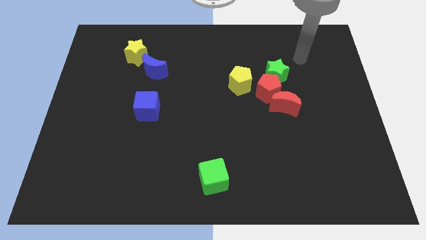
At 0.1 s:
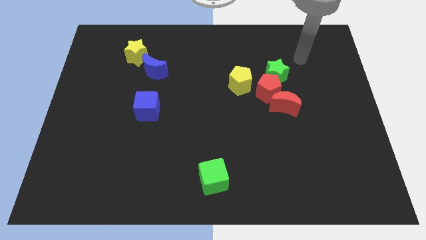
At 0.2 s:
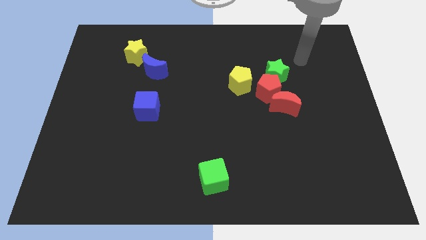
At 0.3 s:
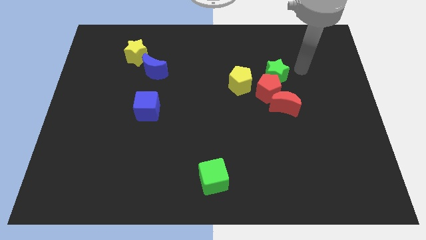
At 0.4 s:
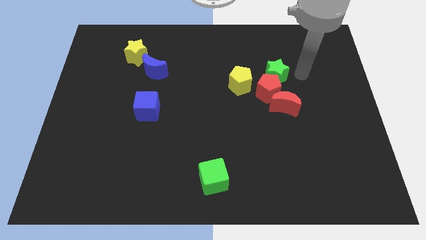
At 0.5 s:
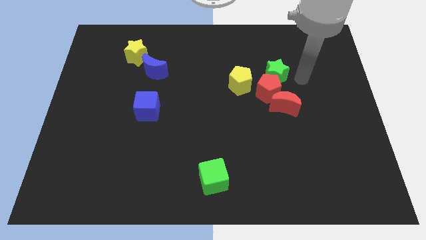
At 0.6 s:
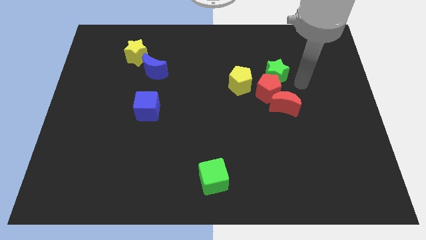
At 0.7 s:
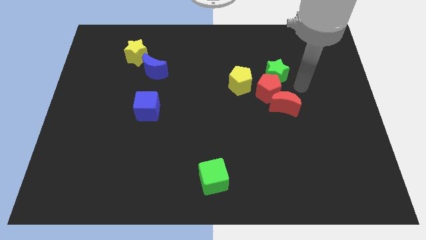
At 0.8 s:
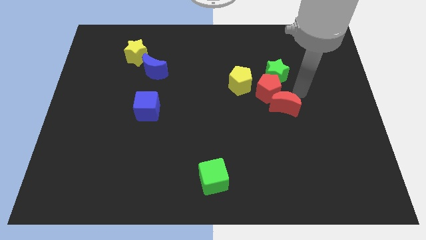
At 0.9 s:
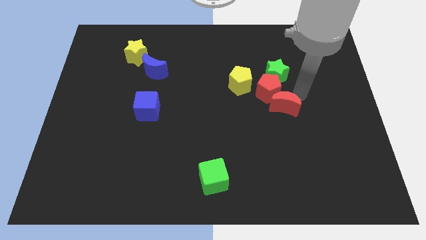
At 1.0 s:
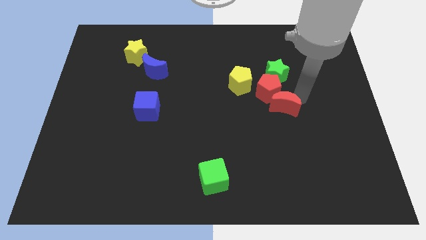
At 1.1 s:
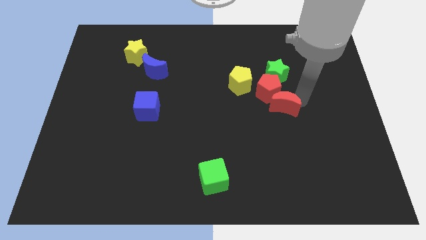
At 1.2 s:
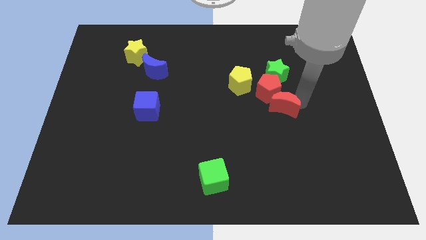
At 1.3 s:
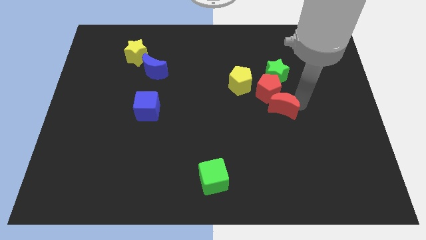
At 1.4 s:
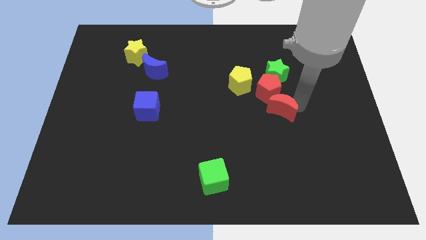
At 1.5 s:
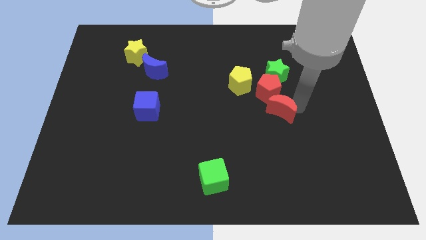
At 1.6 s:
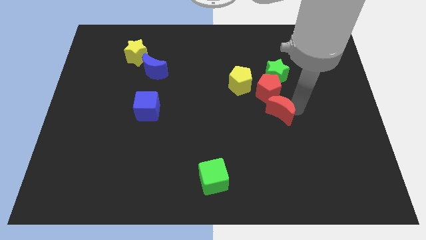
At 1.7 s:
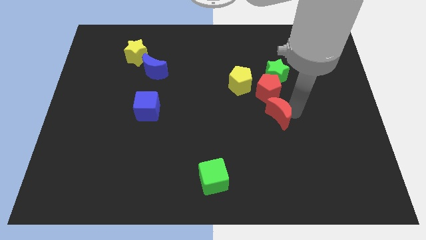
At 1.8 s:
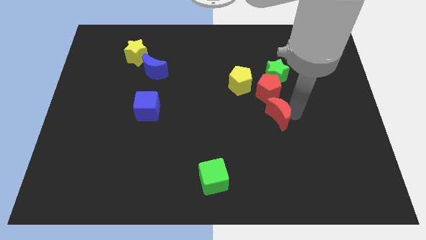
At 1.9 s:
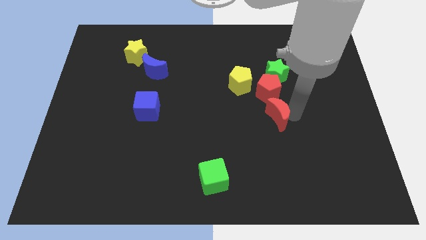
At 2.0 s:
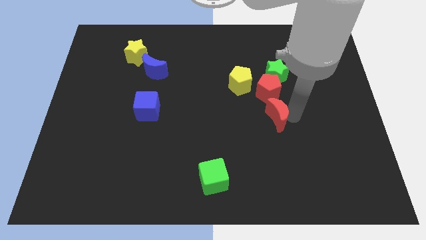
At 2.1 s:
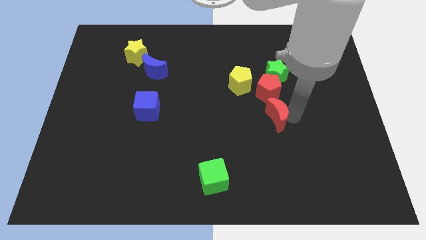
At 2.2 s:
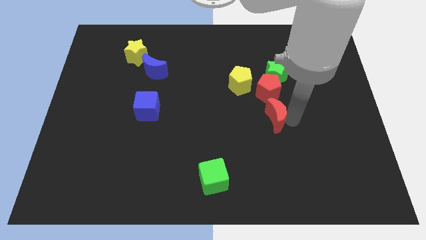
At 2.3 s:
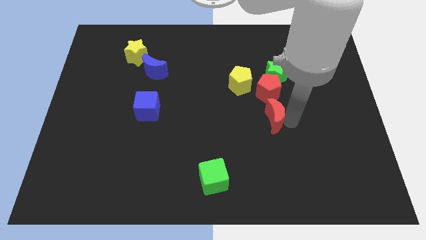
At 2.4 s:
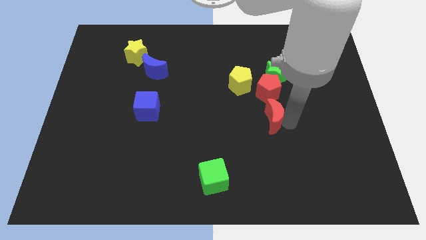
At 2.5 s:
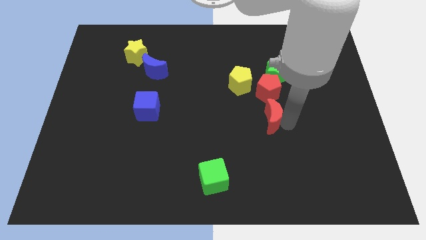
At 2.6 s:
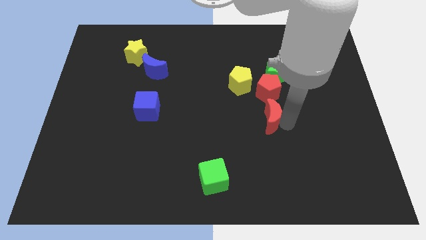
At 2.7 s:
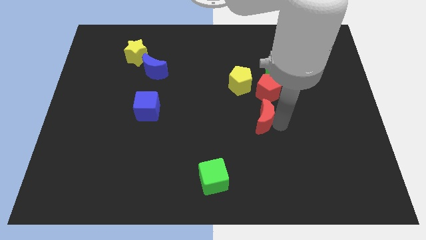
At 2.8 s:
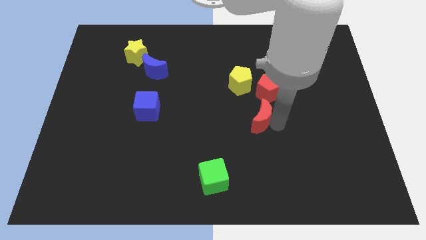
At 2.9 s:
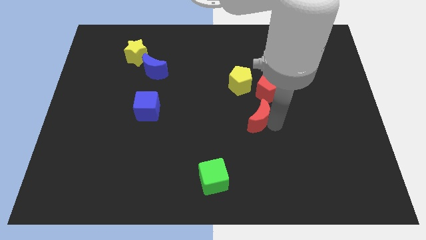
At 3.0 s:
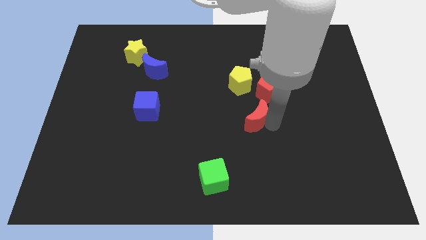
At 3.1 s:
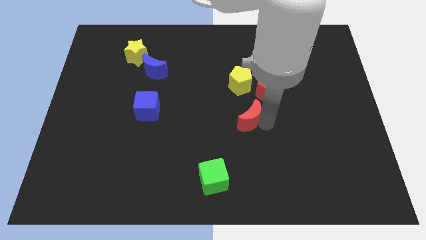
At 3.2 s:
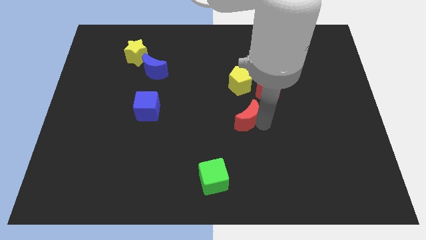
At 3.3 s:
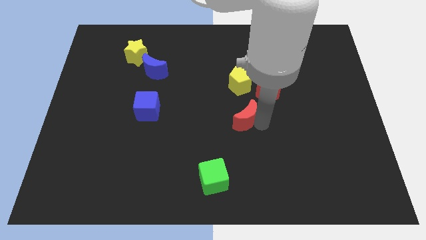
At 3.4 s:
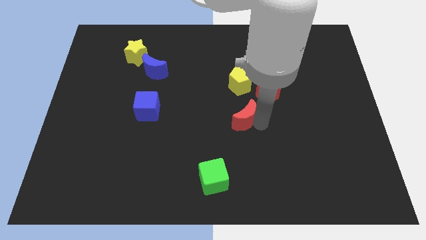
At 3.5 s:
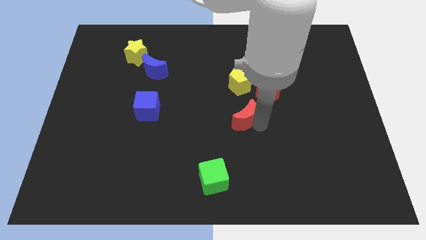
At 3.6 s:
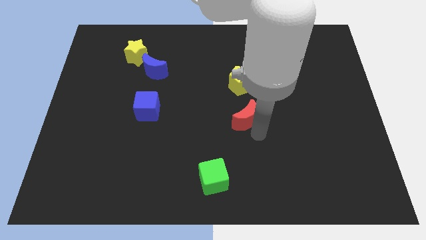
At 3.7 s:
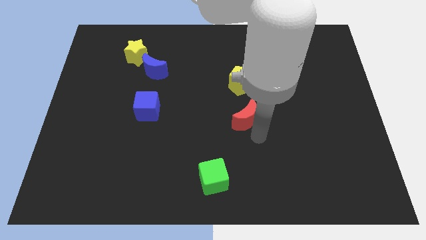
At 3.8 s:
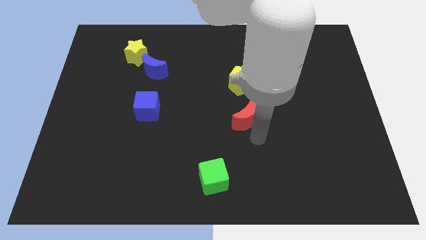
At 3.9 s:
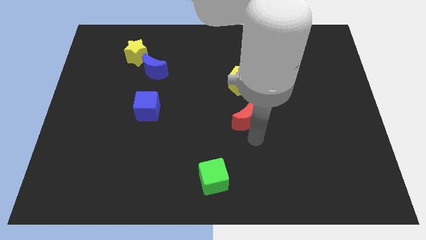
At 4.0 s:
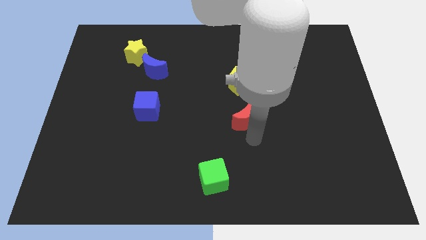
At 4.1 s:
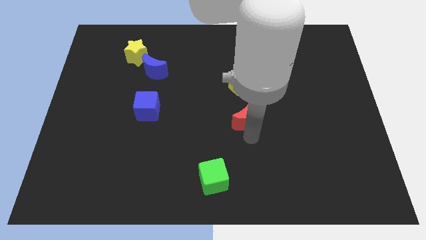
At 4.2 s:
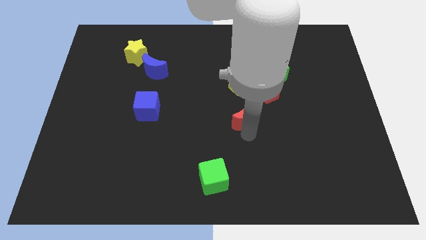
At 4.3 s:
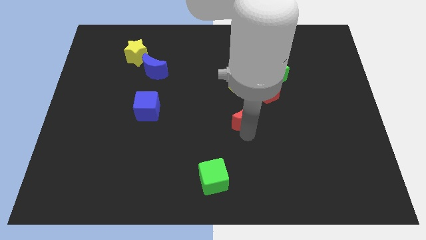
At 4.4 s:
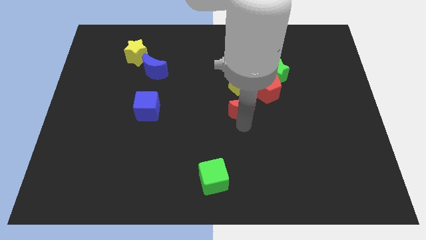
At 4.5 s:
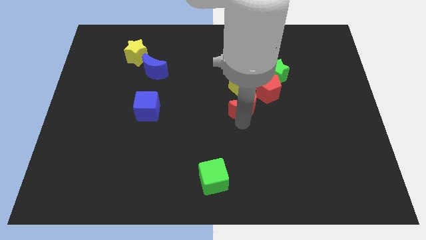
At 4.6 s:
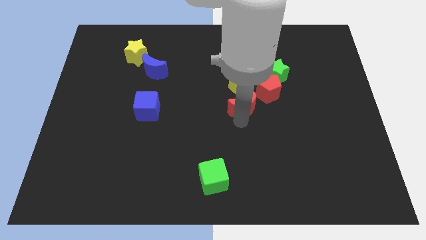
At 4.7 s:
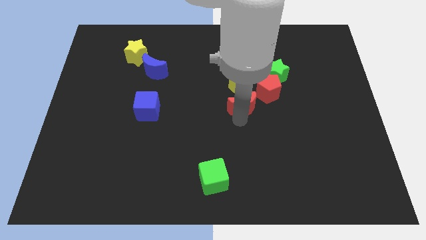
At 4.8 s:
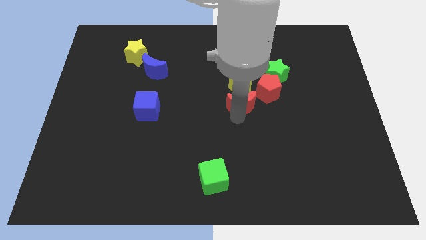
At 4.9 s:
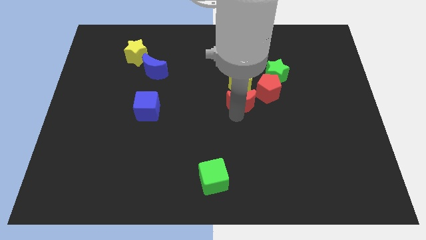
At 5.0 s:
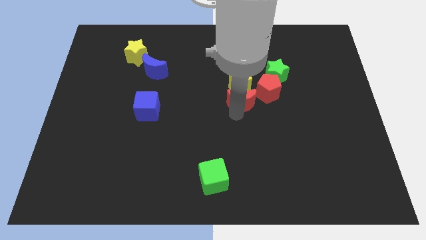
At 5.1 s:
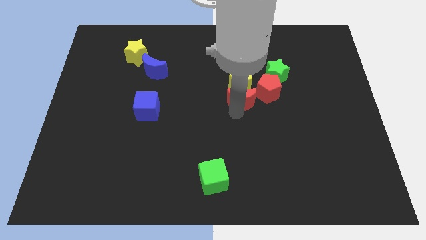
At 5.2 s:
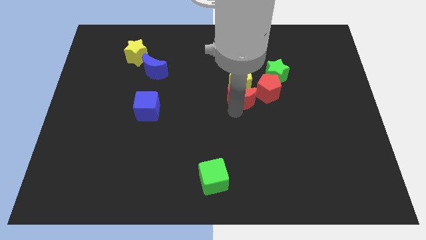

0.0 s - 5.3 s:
slide the red moon next to the yellow pentagon

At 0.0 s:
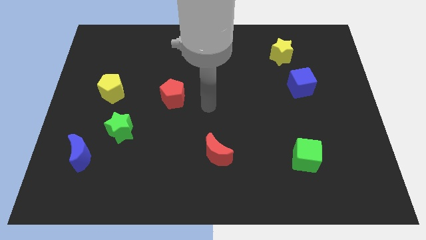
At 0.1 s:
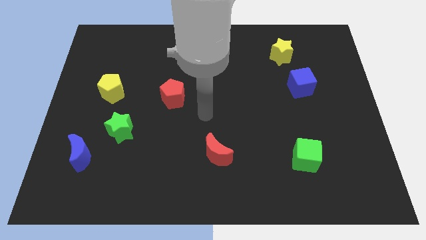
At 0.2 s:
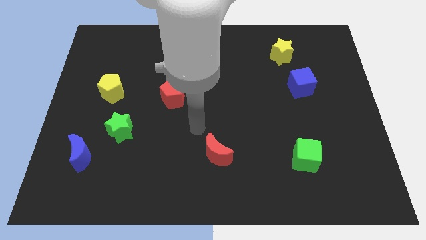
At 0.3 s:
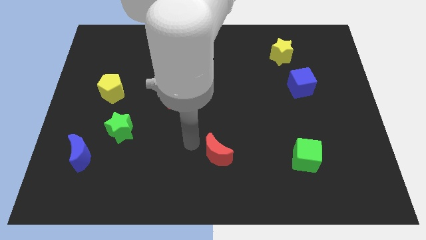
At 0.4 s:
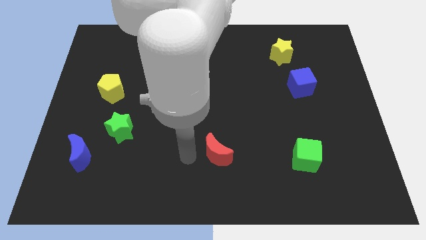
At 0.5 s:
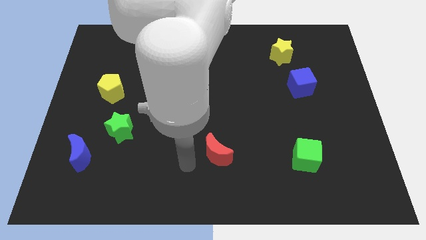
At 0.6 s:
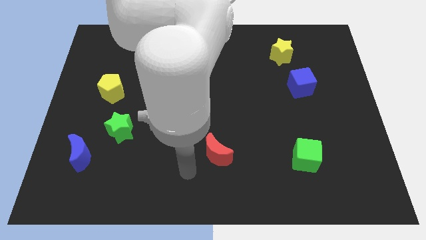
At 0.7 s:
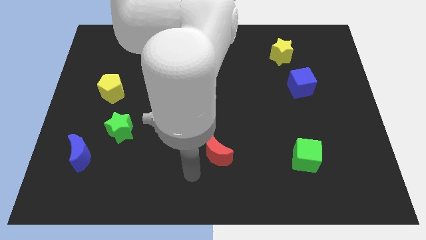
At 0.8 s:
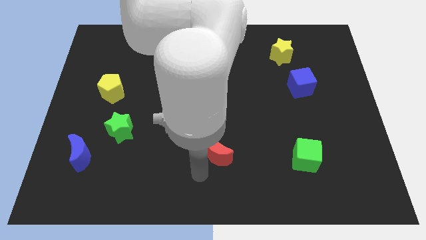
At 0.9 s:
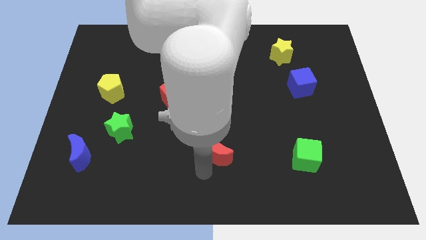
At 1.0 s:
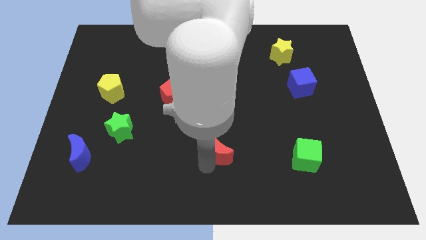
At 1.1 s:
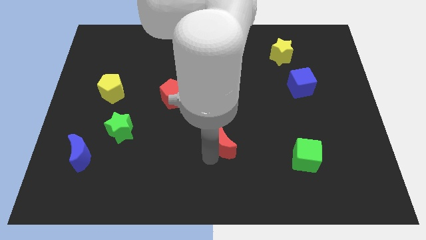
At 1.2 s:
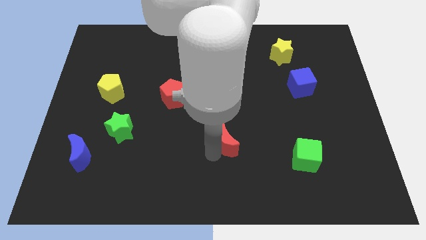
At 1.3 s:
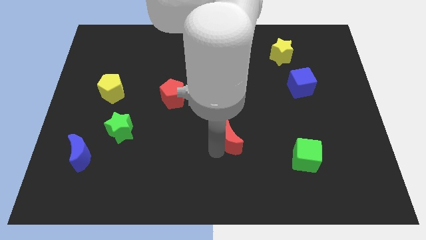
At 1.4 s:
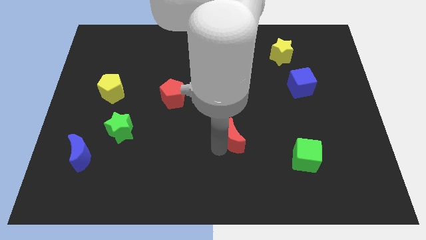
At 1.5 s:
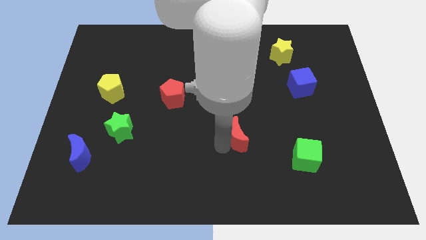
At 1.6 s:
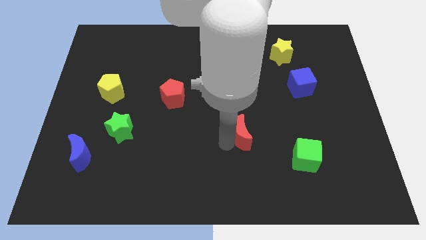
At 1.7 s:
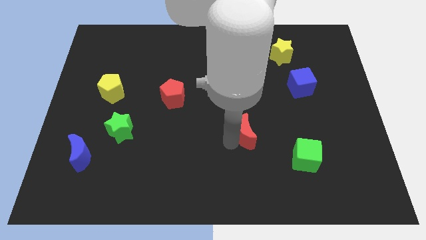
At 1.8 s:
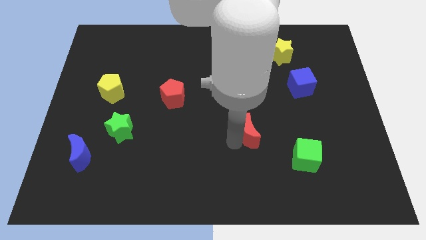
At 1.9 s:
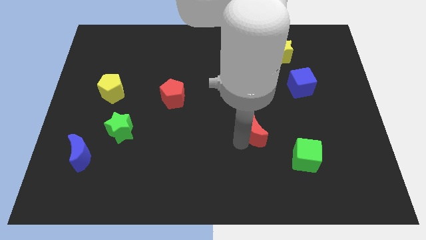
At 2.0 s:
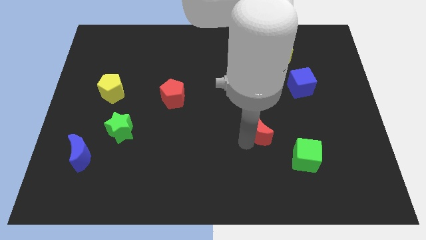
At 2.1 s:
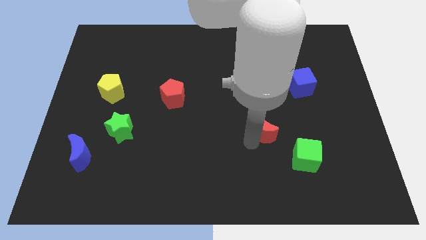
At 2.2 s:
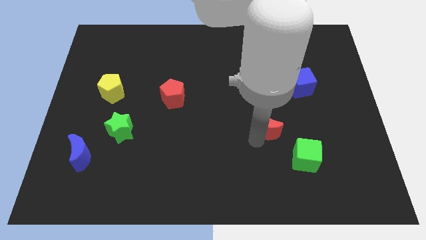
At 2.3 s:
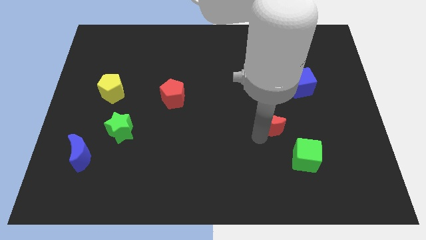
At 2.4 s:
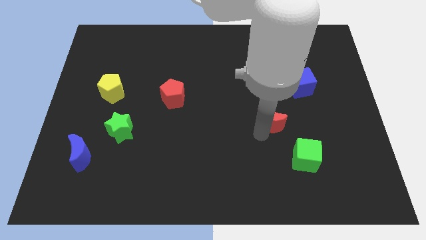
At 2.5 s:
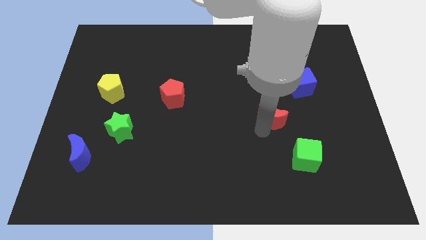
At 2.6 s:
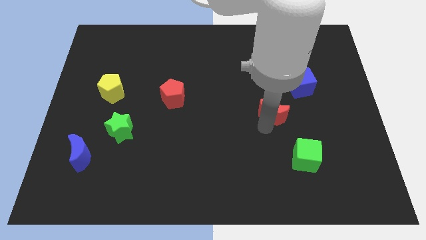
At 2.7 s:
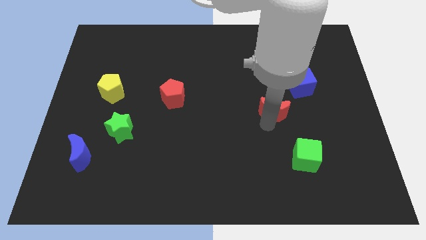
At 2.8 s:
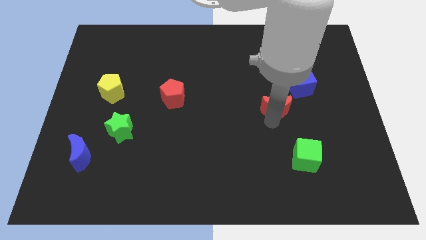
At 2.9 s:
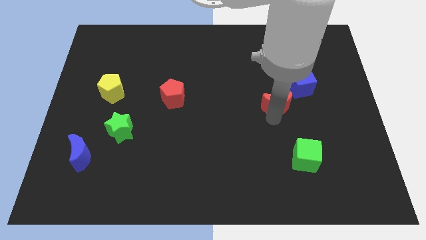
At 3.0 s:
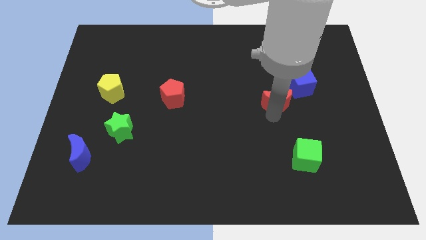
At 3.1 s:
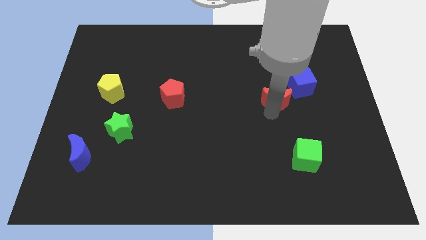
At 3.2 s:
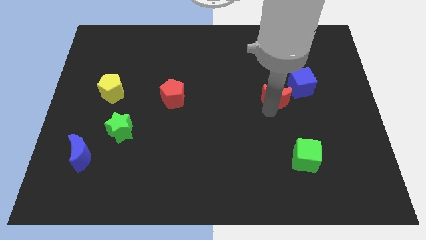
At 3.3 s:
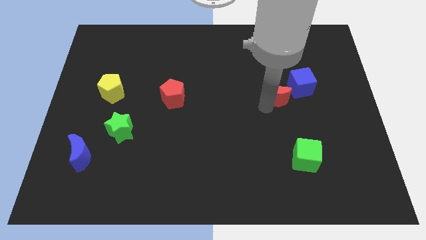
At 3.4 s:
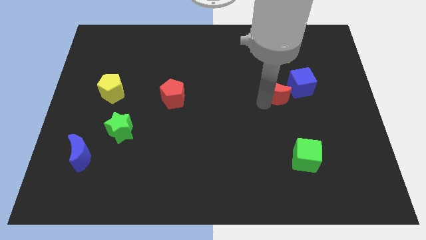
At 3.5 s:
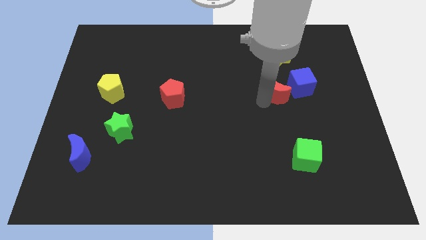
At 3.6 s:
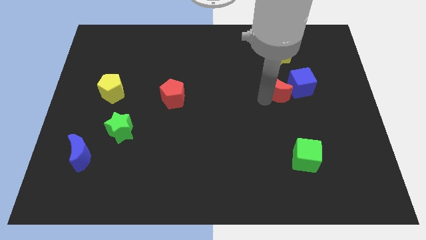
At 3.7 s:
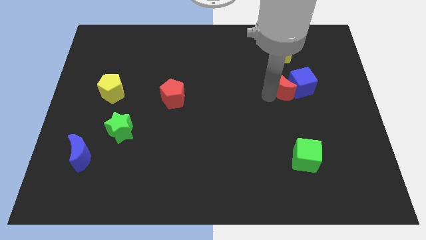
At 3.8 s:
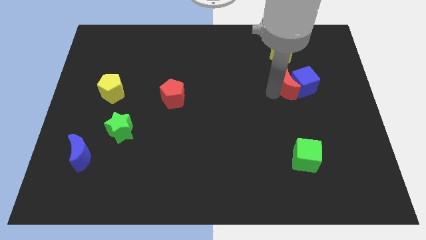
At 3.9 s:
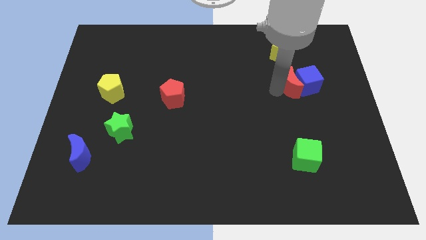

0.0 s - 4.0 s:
move the red moon close to the blue cube
